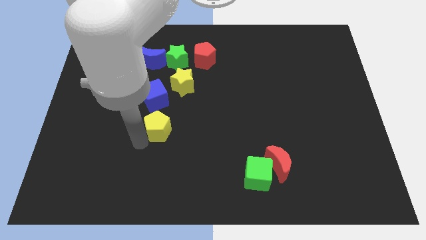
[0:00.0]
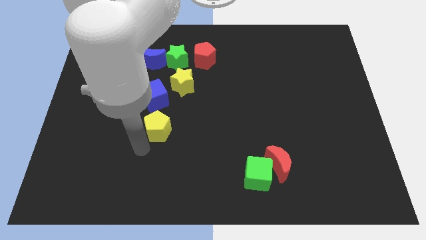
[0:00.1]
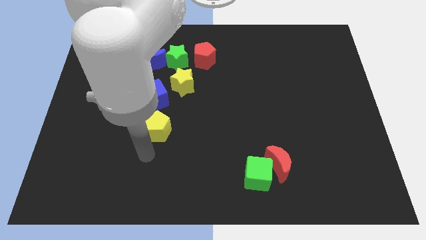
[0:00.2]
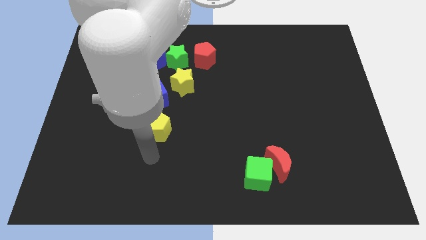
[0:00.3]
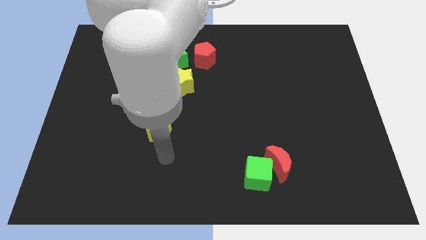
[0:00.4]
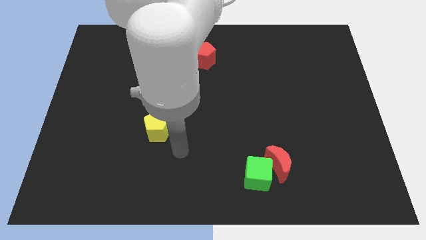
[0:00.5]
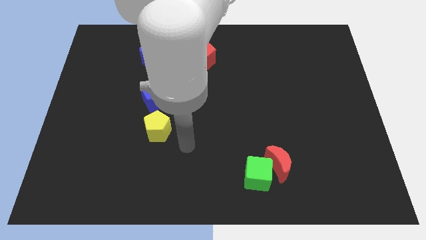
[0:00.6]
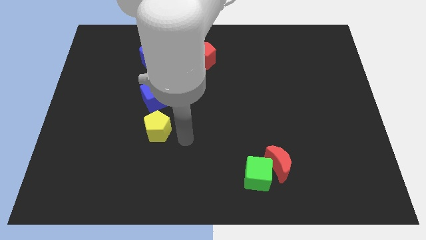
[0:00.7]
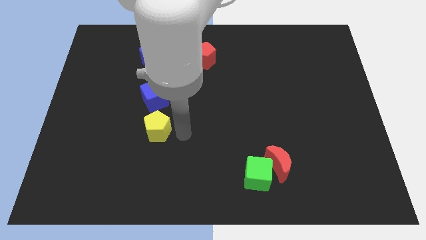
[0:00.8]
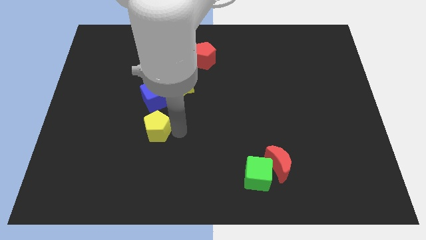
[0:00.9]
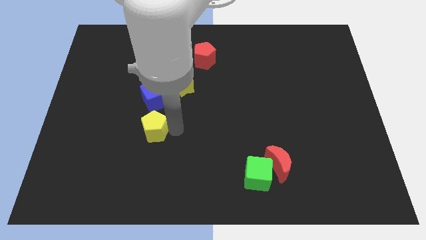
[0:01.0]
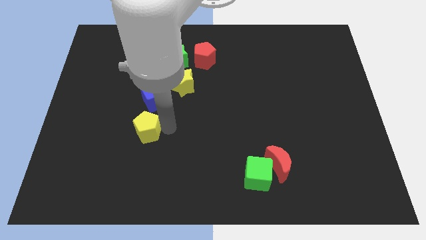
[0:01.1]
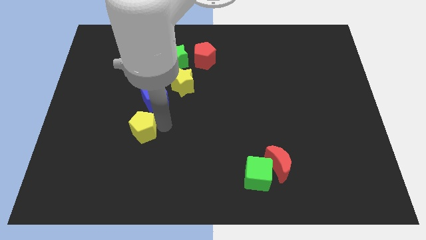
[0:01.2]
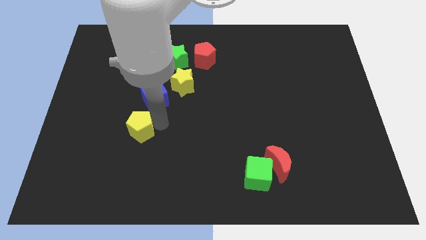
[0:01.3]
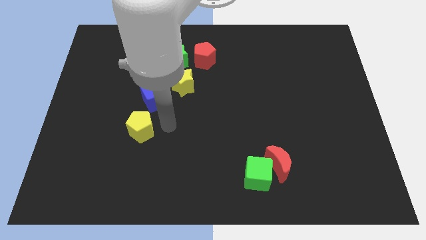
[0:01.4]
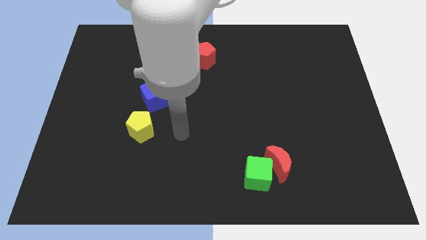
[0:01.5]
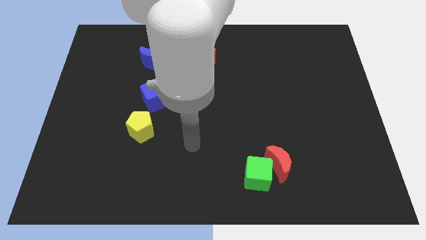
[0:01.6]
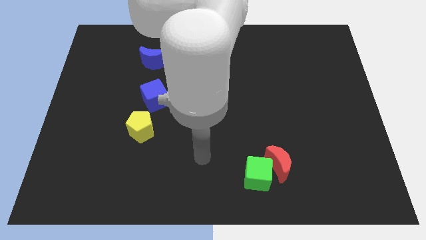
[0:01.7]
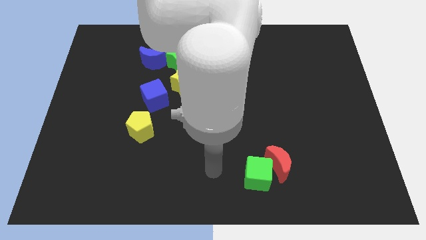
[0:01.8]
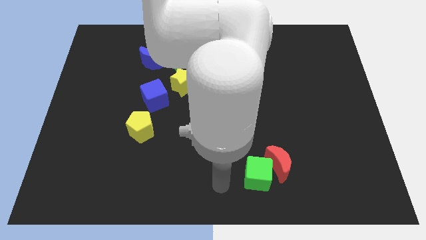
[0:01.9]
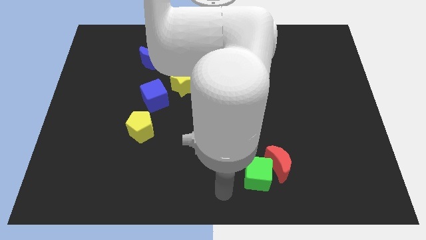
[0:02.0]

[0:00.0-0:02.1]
slide the yellow pentagon towards the bottom left of the blue cube

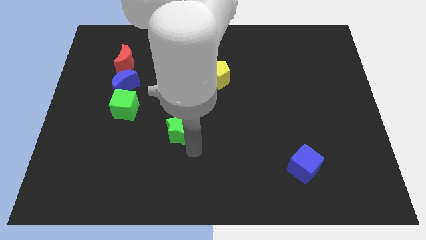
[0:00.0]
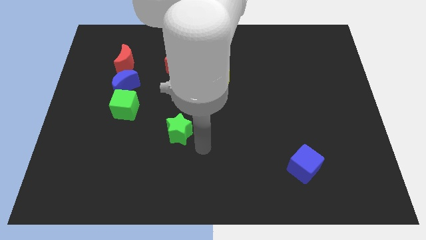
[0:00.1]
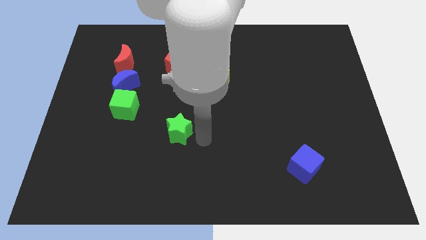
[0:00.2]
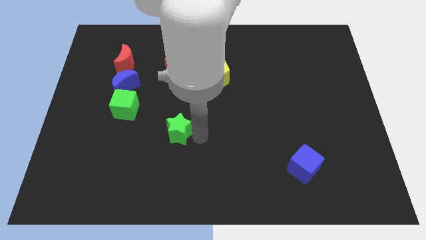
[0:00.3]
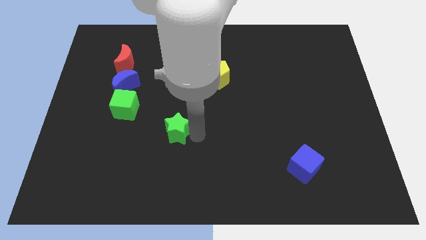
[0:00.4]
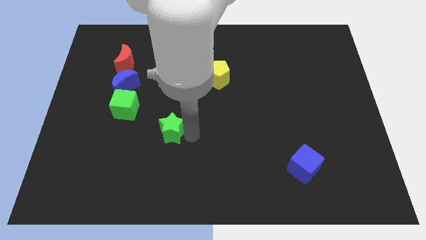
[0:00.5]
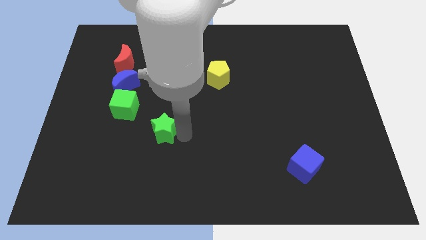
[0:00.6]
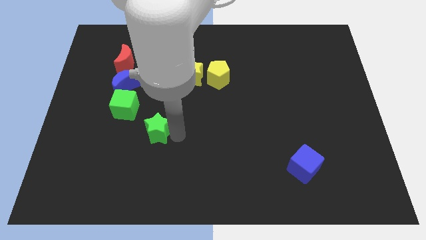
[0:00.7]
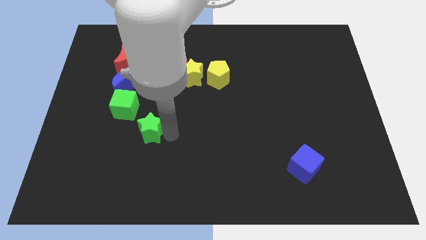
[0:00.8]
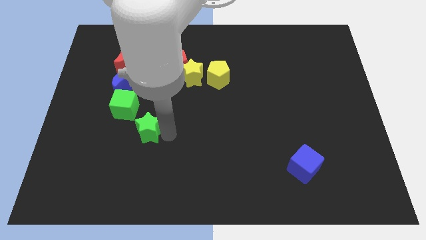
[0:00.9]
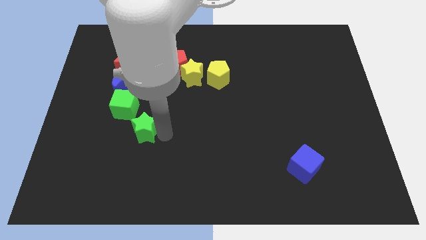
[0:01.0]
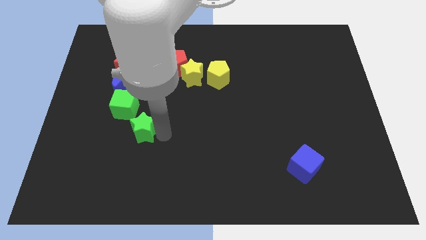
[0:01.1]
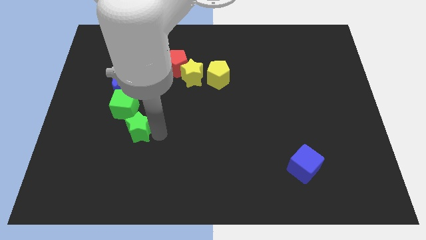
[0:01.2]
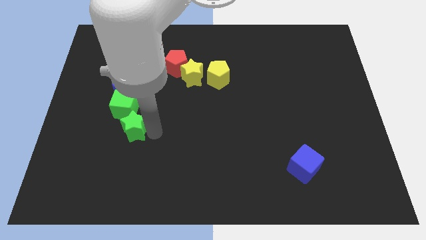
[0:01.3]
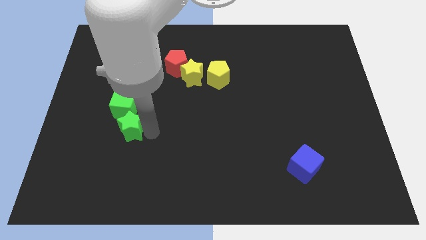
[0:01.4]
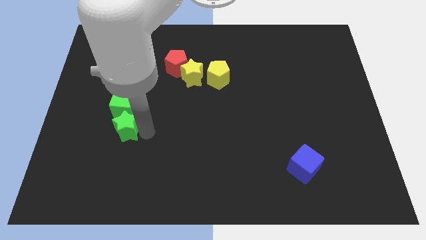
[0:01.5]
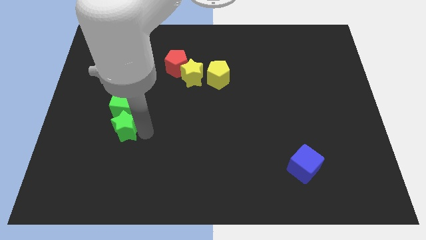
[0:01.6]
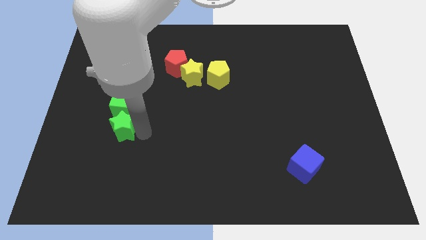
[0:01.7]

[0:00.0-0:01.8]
move green star to the bottom of the green cube

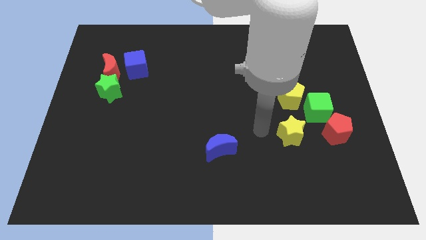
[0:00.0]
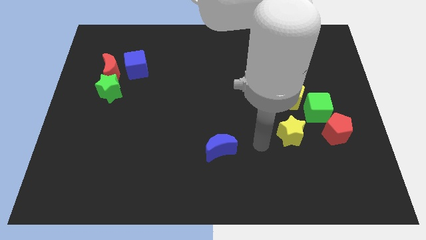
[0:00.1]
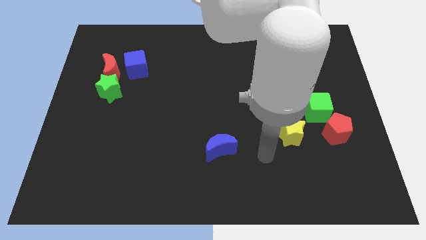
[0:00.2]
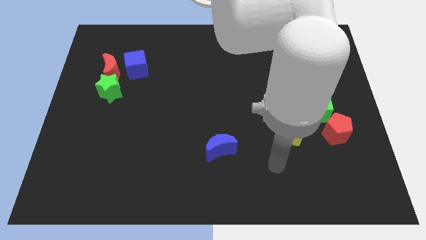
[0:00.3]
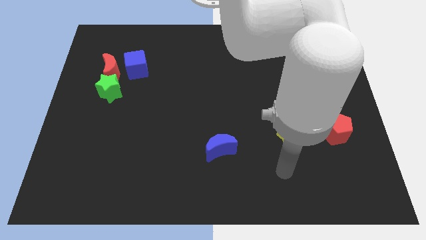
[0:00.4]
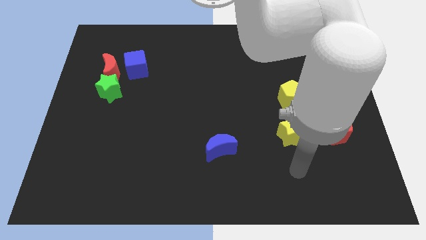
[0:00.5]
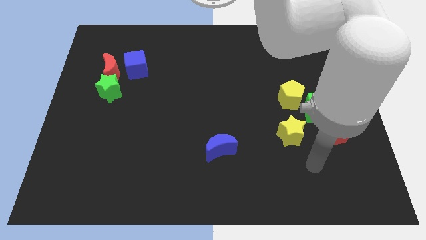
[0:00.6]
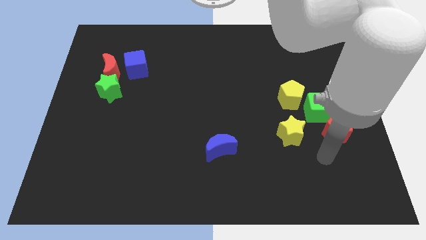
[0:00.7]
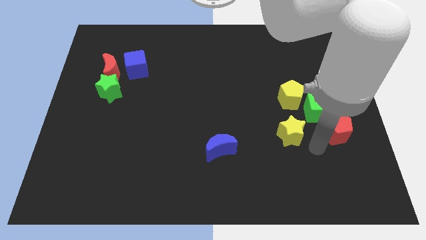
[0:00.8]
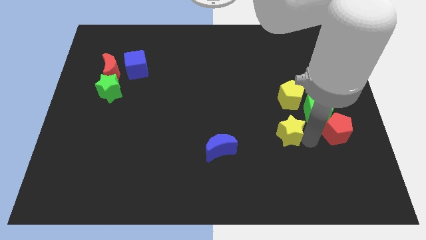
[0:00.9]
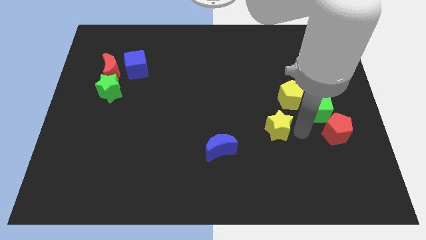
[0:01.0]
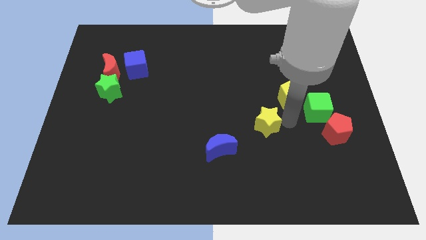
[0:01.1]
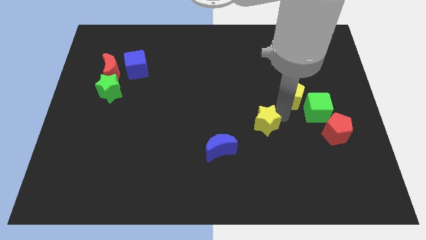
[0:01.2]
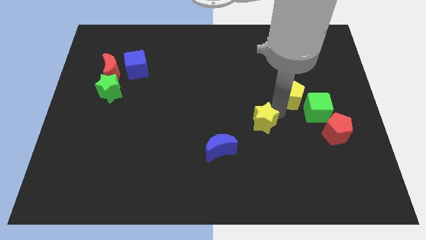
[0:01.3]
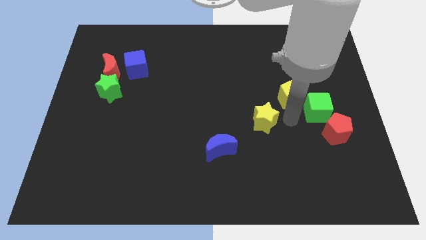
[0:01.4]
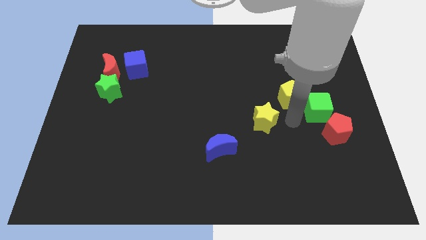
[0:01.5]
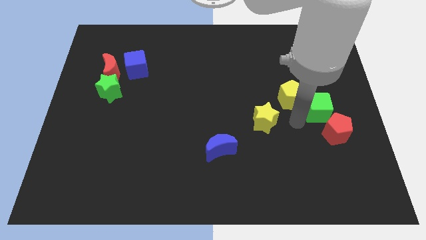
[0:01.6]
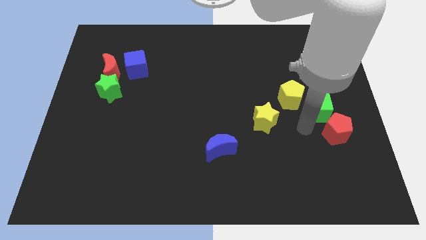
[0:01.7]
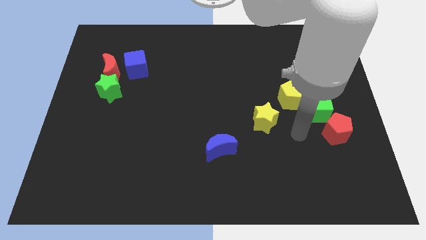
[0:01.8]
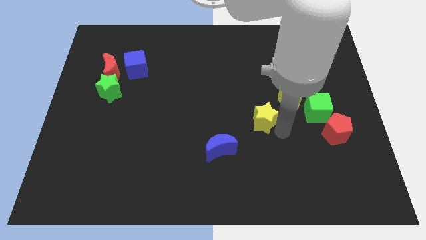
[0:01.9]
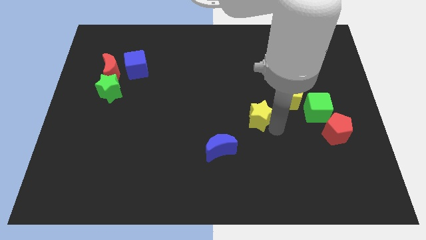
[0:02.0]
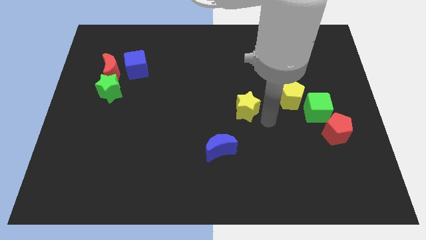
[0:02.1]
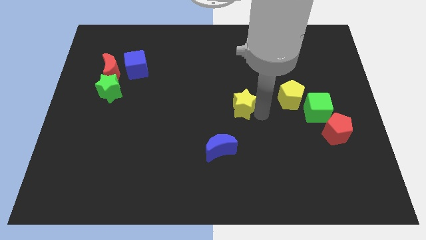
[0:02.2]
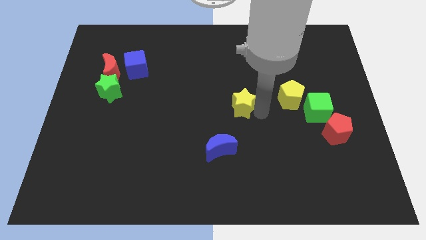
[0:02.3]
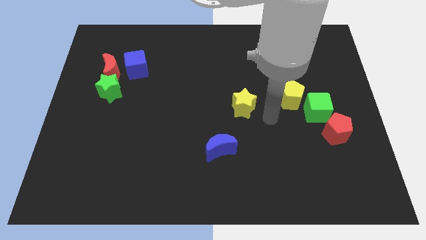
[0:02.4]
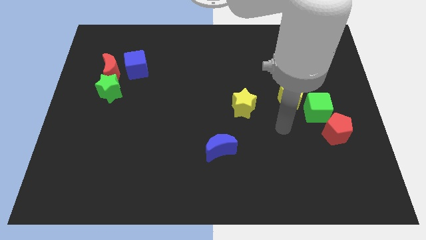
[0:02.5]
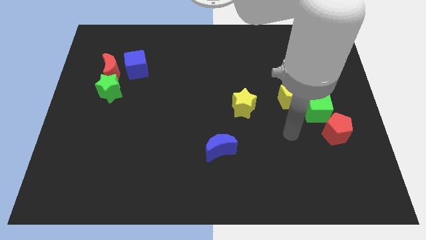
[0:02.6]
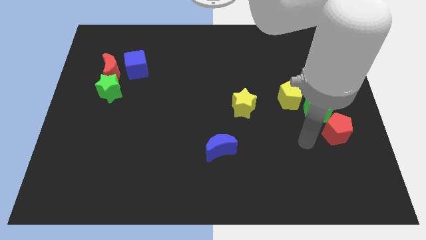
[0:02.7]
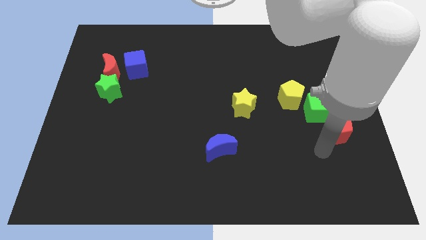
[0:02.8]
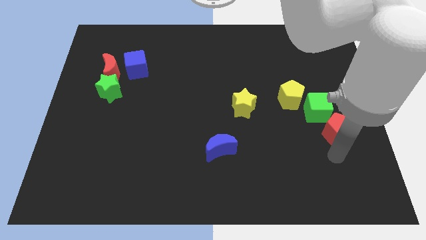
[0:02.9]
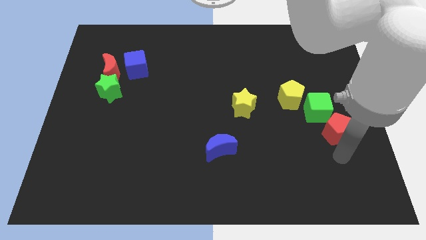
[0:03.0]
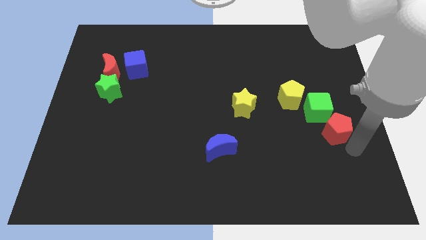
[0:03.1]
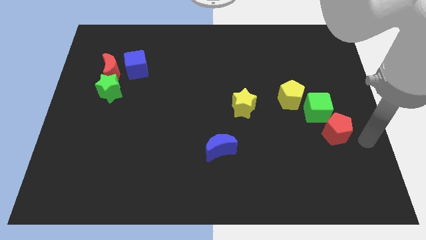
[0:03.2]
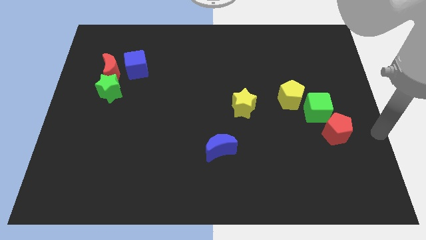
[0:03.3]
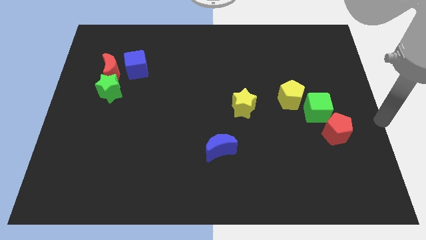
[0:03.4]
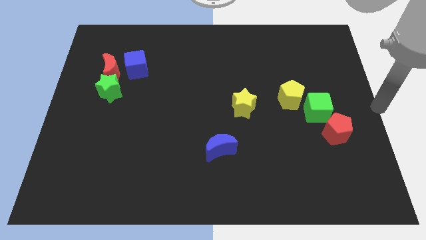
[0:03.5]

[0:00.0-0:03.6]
move the yellow star diagonally on the top right of the blue moon

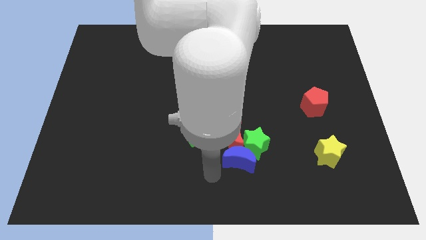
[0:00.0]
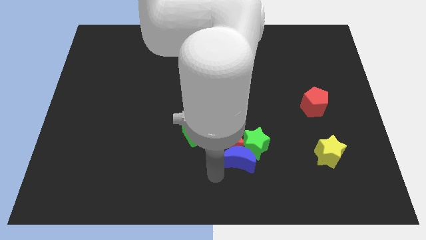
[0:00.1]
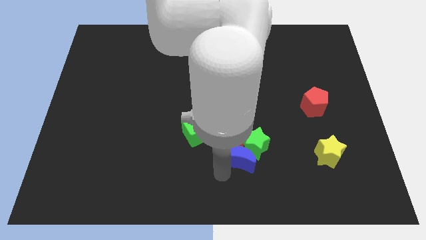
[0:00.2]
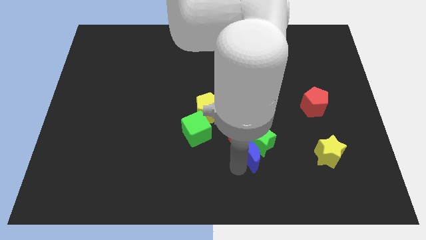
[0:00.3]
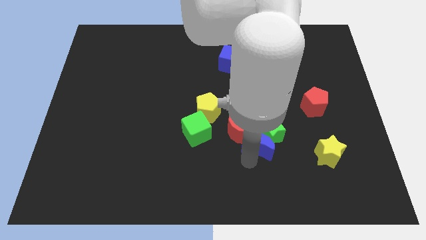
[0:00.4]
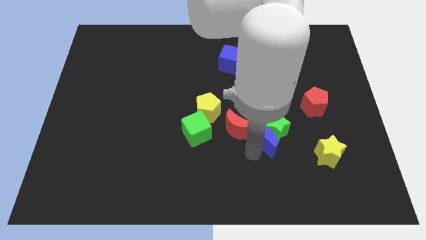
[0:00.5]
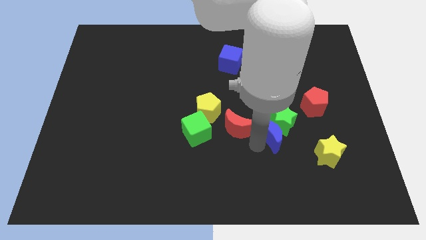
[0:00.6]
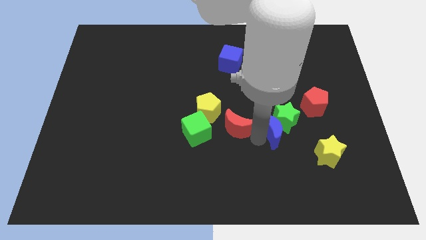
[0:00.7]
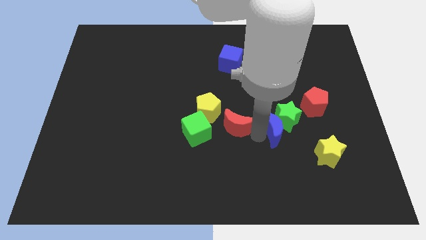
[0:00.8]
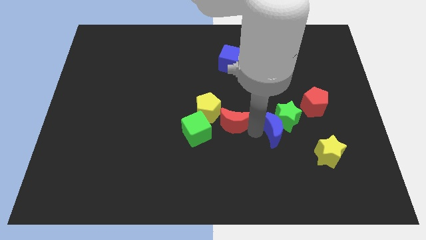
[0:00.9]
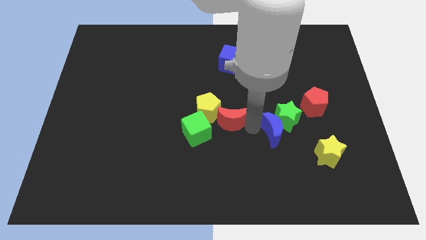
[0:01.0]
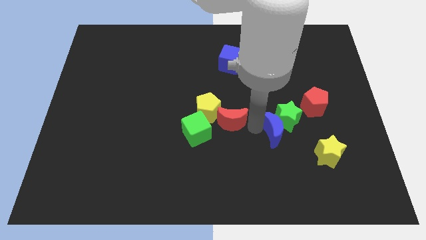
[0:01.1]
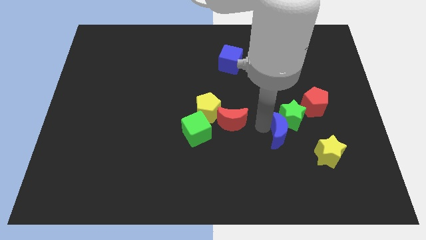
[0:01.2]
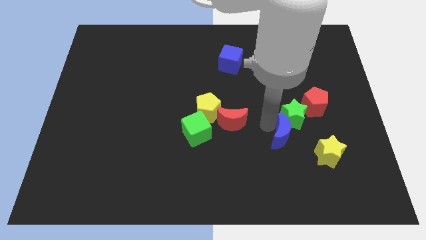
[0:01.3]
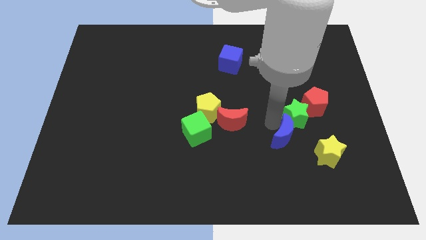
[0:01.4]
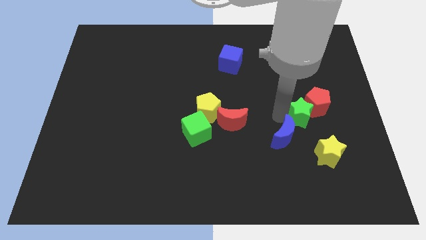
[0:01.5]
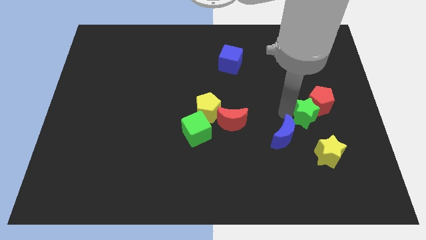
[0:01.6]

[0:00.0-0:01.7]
push the green star slightly towards the red pentagon with the blue crescent
